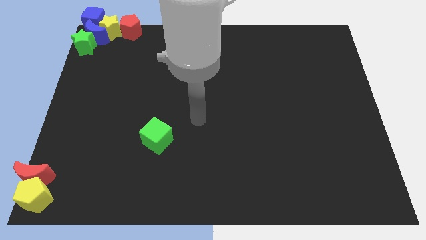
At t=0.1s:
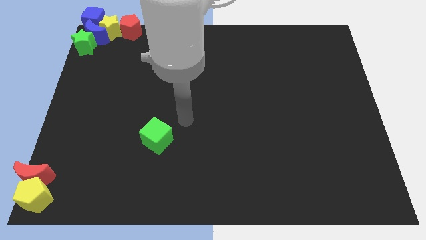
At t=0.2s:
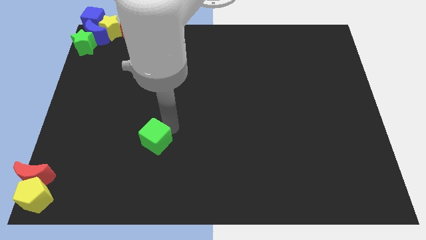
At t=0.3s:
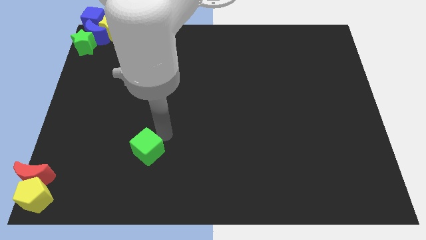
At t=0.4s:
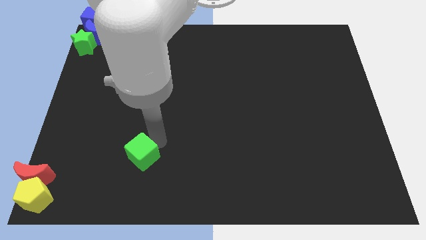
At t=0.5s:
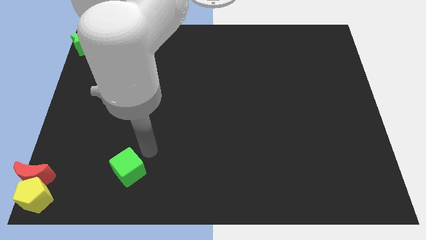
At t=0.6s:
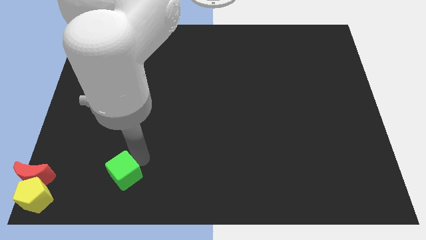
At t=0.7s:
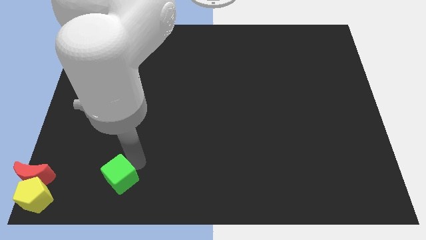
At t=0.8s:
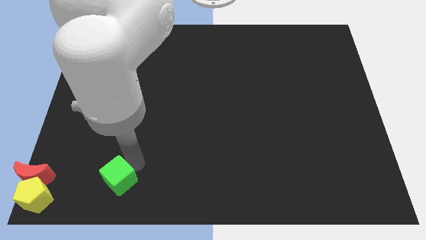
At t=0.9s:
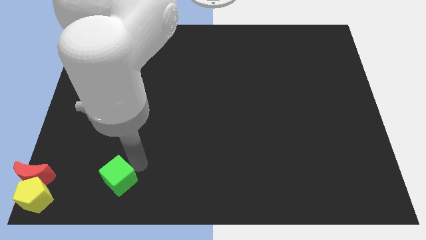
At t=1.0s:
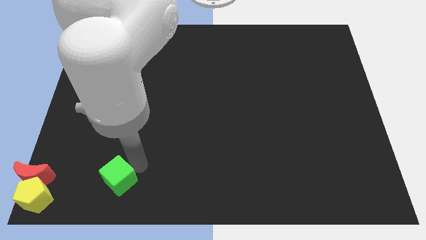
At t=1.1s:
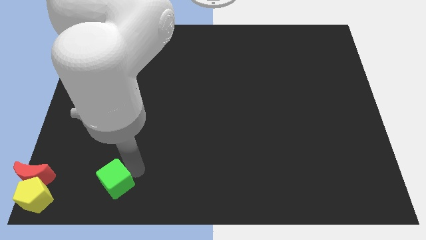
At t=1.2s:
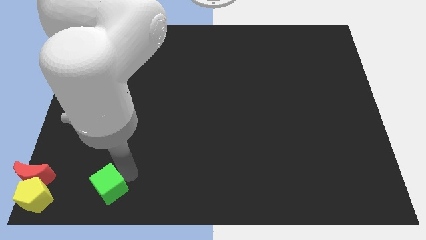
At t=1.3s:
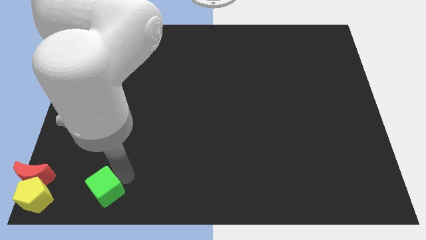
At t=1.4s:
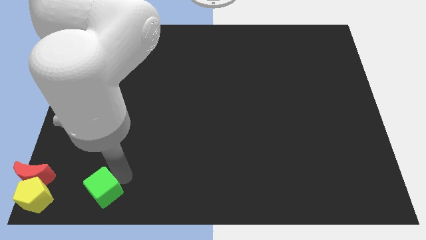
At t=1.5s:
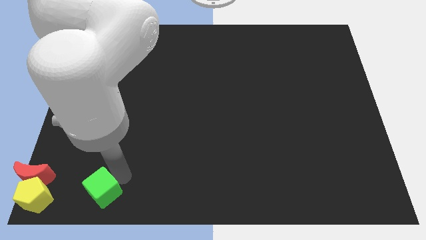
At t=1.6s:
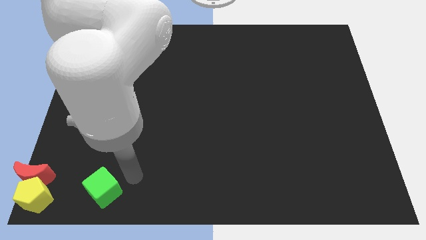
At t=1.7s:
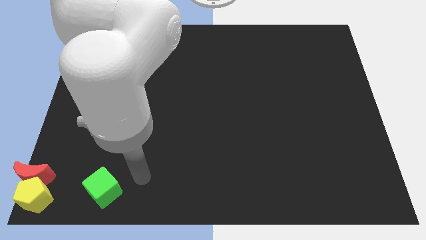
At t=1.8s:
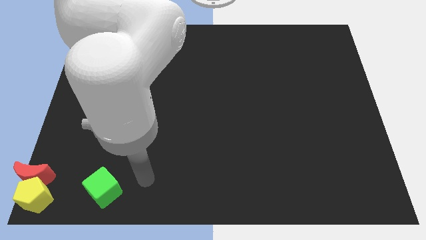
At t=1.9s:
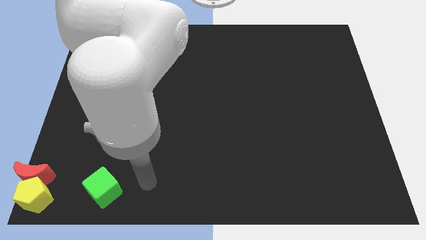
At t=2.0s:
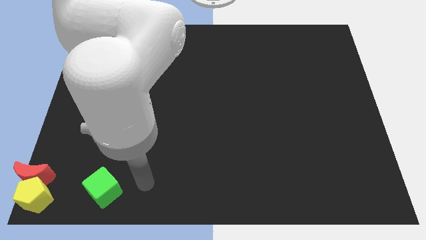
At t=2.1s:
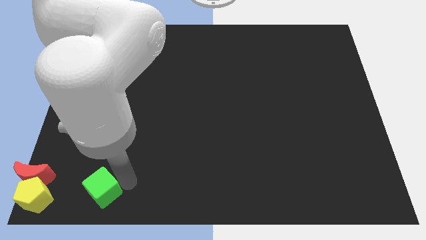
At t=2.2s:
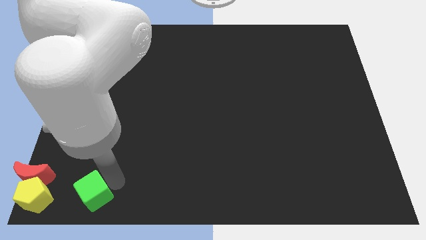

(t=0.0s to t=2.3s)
move the green cube to the right side of the yellow pentagon

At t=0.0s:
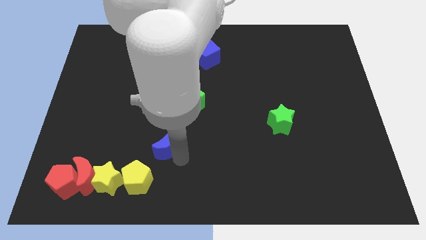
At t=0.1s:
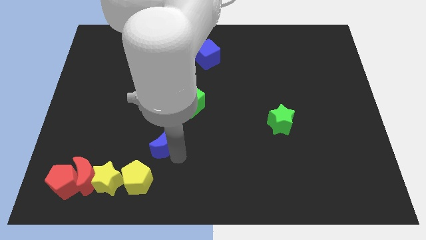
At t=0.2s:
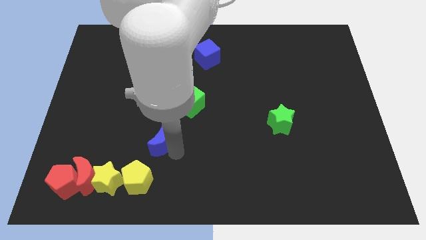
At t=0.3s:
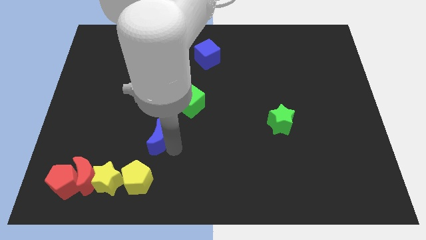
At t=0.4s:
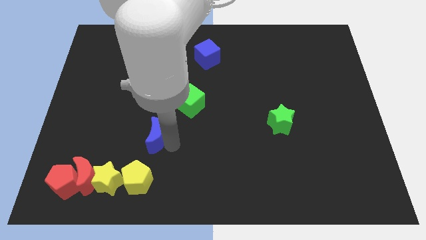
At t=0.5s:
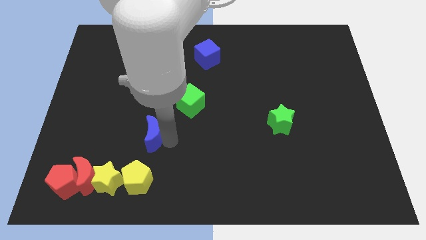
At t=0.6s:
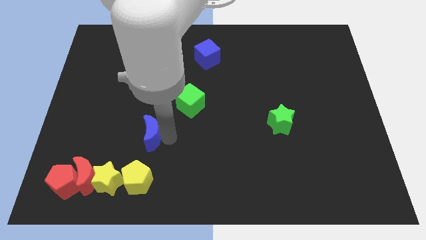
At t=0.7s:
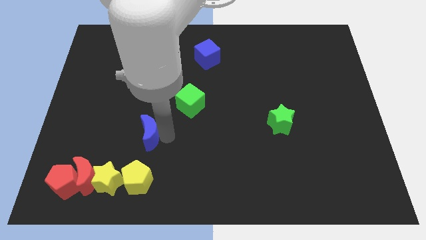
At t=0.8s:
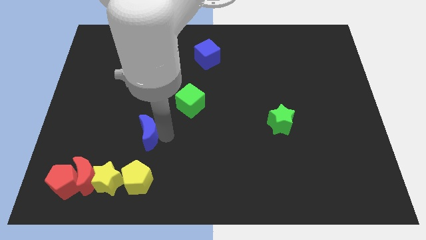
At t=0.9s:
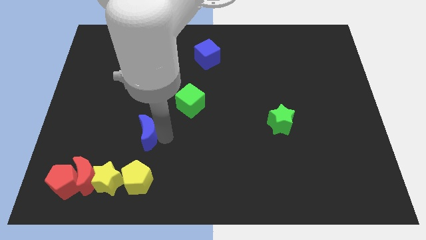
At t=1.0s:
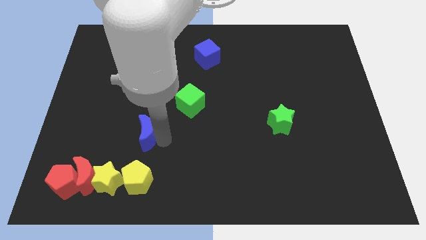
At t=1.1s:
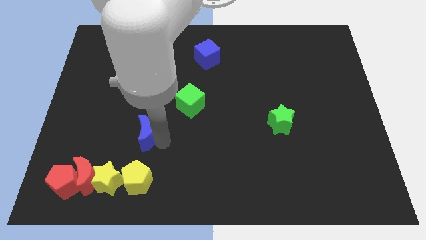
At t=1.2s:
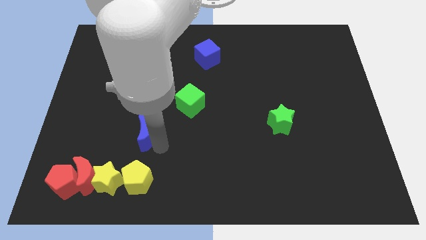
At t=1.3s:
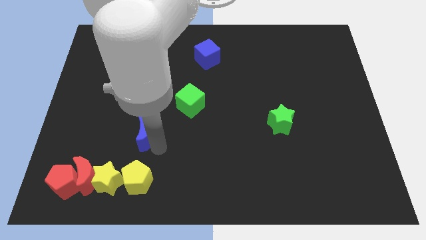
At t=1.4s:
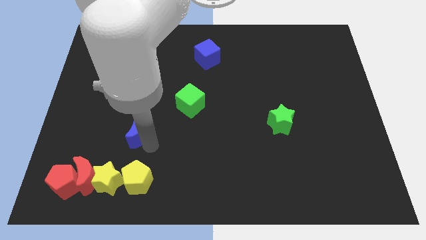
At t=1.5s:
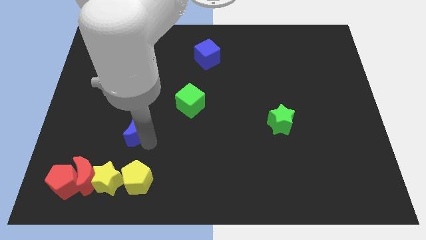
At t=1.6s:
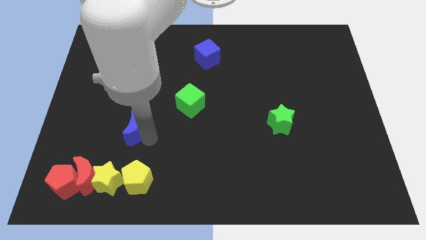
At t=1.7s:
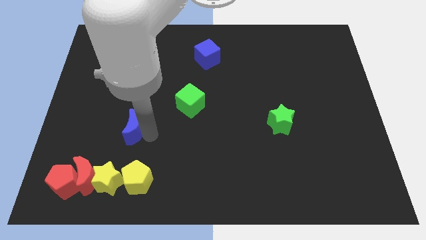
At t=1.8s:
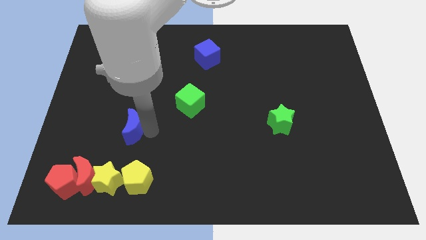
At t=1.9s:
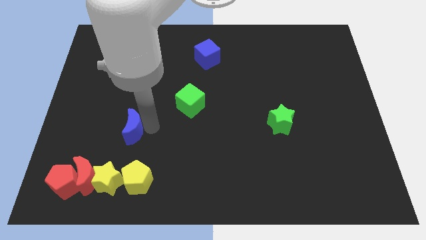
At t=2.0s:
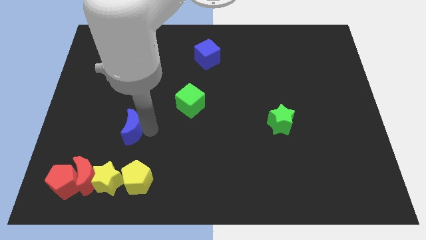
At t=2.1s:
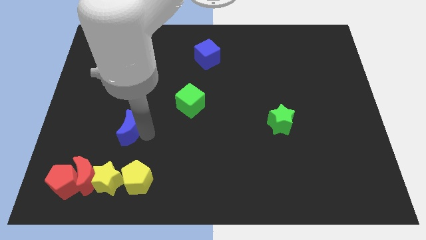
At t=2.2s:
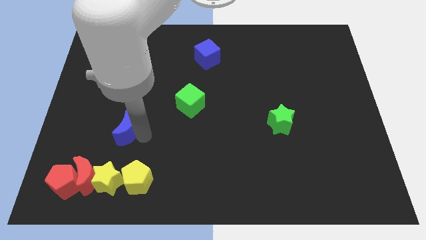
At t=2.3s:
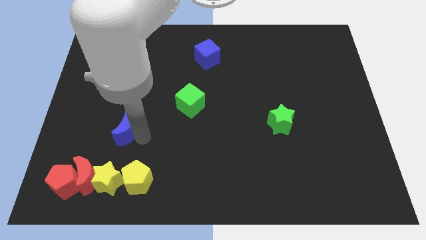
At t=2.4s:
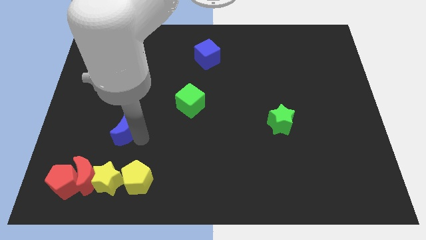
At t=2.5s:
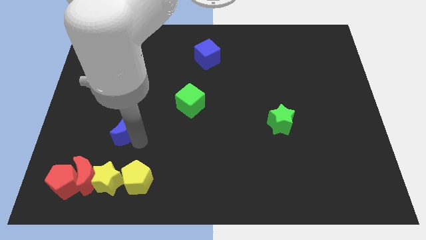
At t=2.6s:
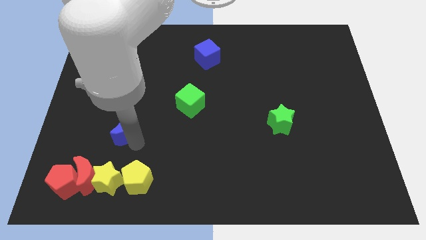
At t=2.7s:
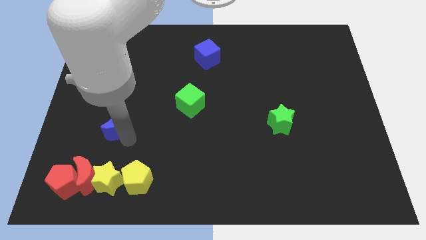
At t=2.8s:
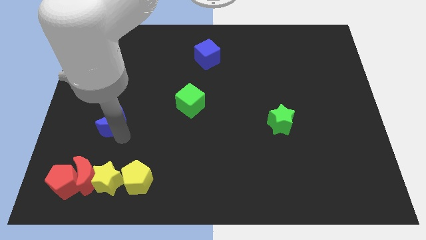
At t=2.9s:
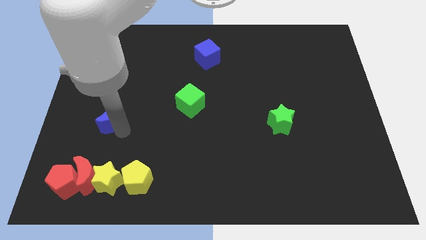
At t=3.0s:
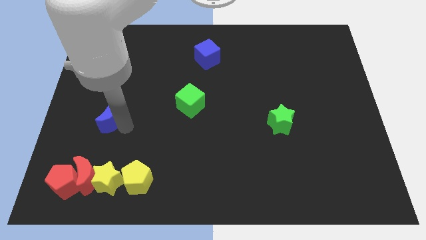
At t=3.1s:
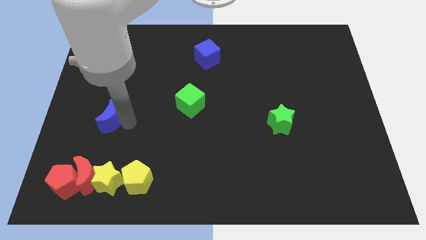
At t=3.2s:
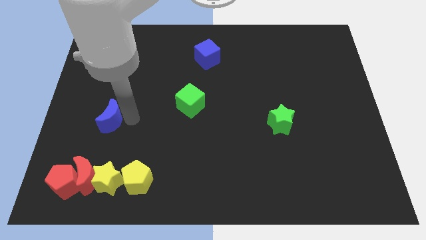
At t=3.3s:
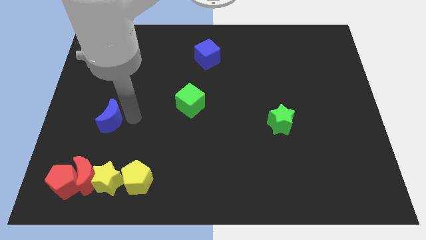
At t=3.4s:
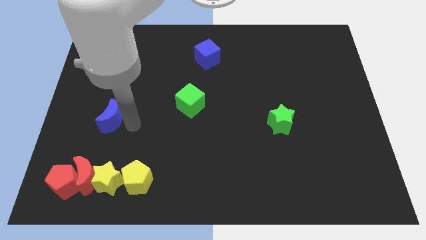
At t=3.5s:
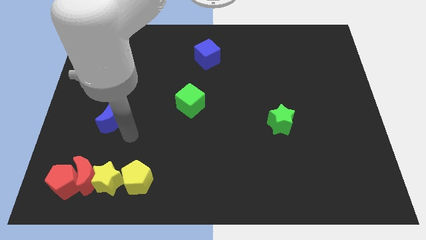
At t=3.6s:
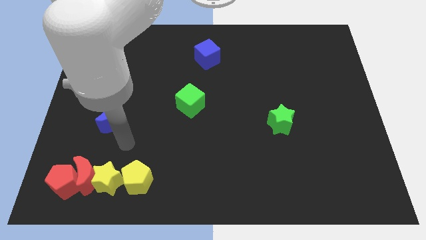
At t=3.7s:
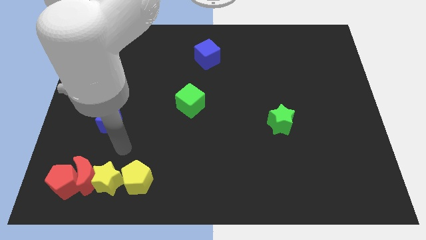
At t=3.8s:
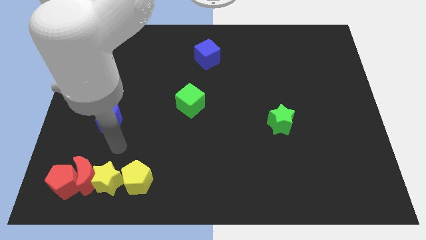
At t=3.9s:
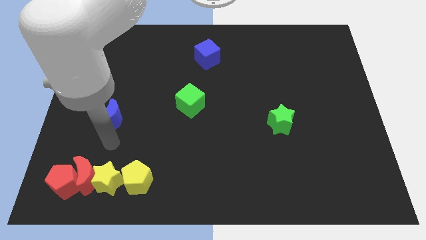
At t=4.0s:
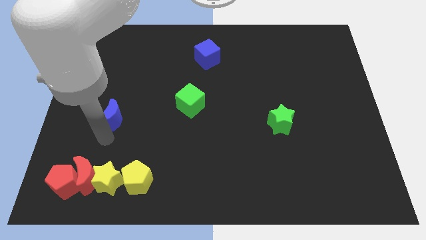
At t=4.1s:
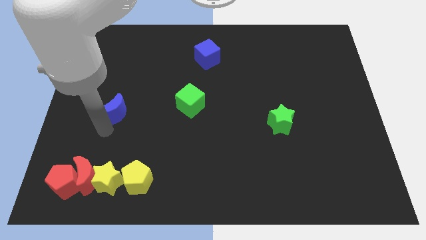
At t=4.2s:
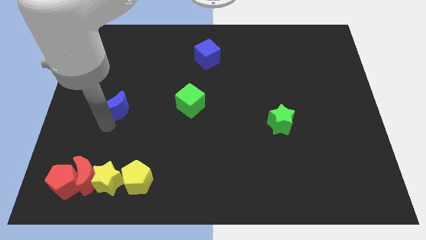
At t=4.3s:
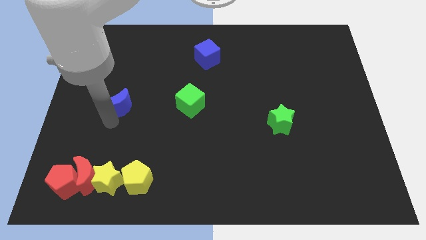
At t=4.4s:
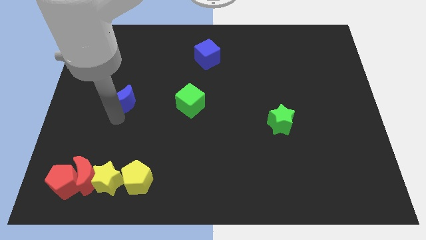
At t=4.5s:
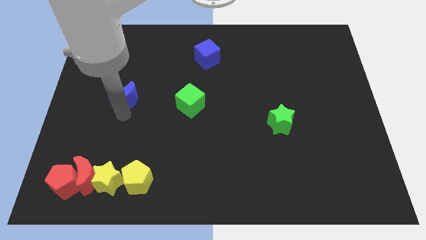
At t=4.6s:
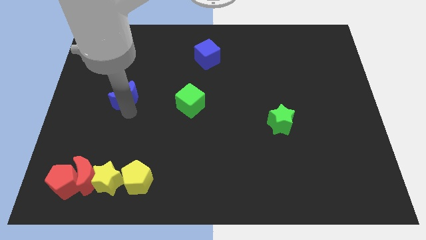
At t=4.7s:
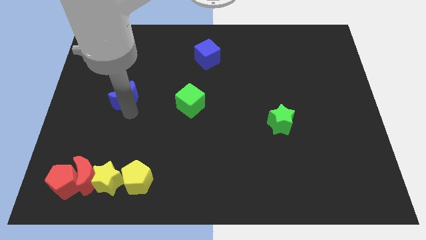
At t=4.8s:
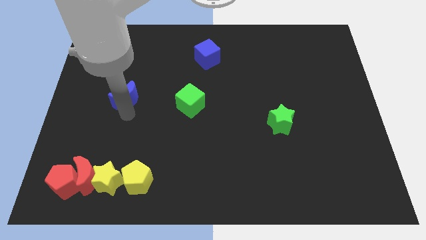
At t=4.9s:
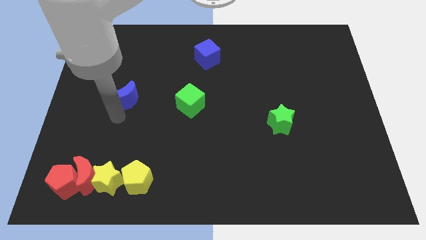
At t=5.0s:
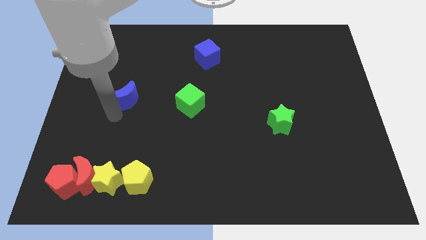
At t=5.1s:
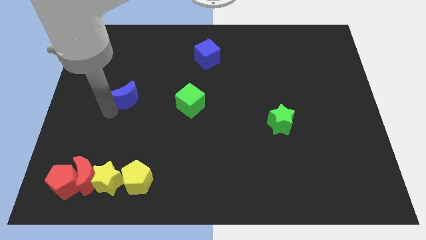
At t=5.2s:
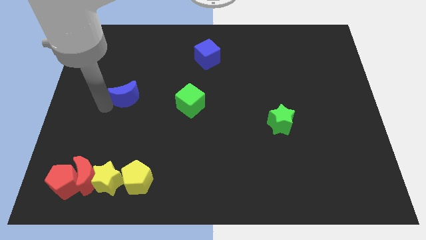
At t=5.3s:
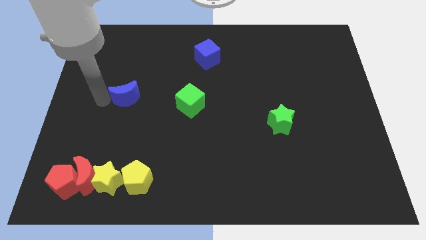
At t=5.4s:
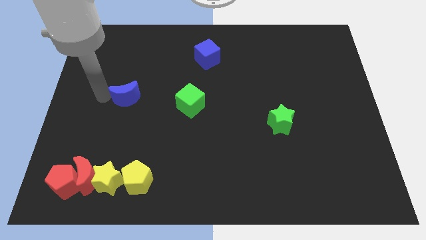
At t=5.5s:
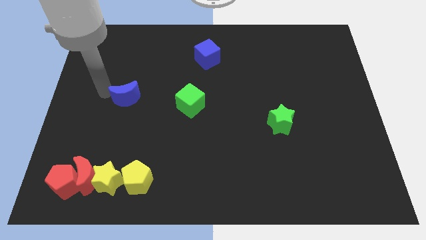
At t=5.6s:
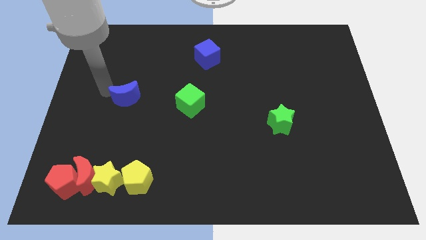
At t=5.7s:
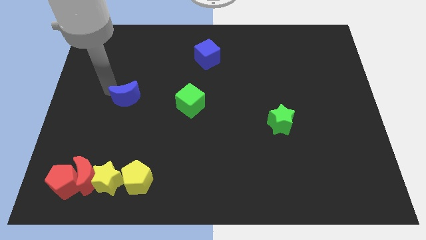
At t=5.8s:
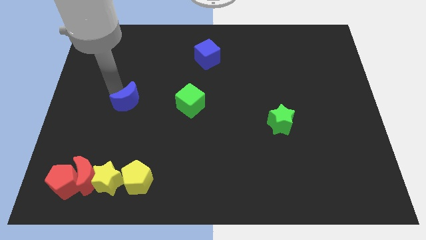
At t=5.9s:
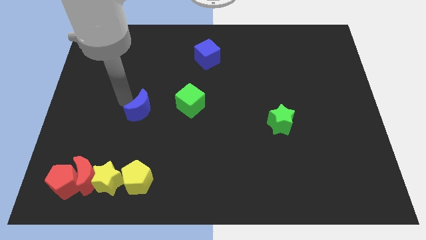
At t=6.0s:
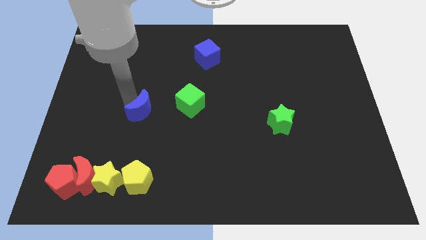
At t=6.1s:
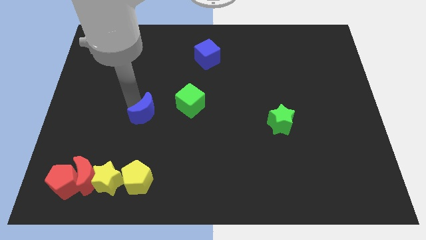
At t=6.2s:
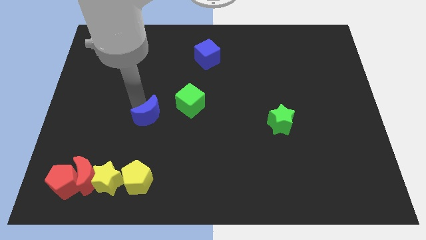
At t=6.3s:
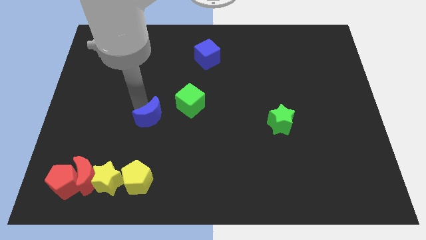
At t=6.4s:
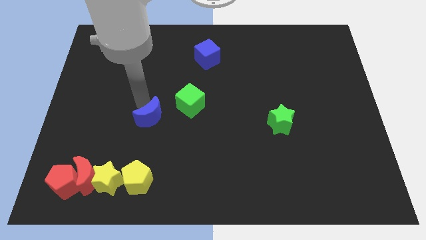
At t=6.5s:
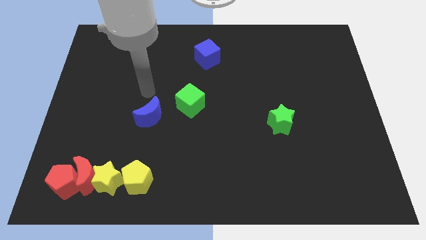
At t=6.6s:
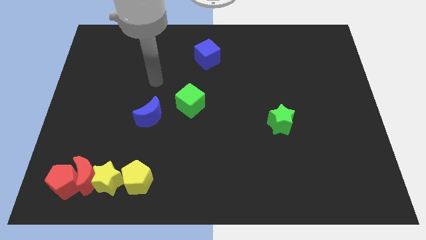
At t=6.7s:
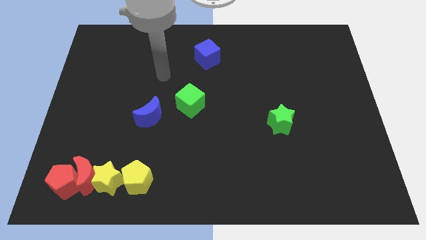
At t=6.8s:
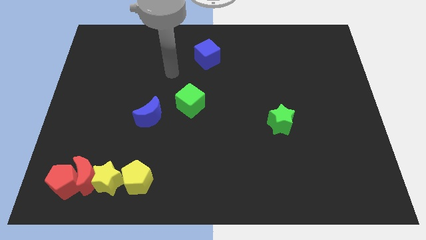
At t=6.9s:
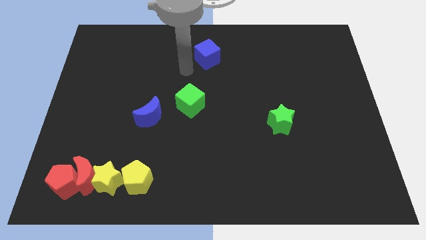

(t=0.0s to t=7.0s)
place the blue moon left to the green cube
